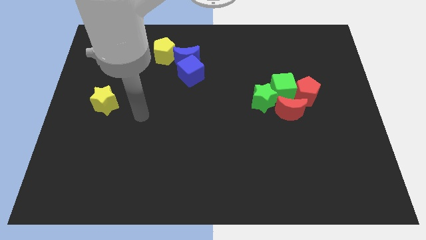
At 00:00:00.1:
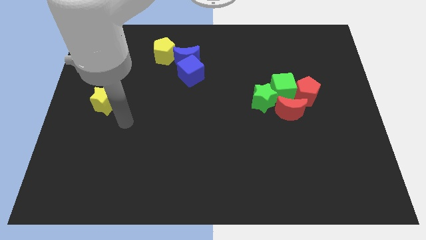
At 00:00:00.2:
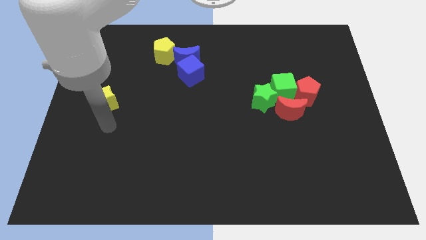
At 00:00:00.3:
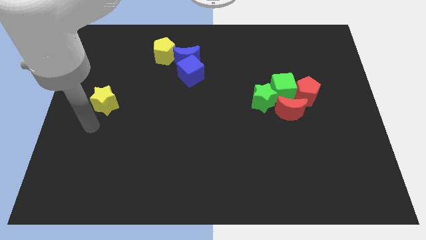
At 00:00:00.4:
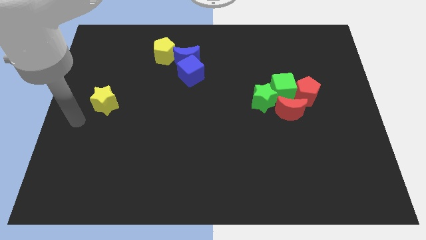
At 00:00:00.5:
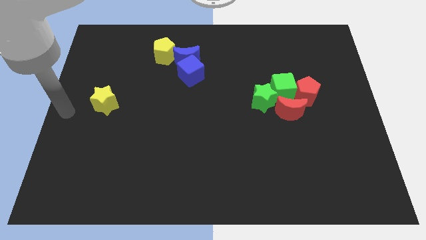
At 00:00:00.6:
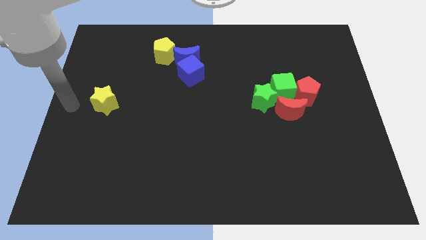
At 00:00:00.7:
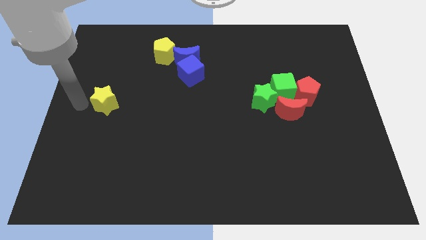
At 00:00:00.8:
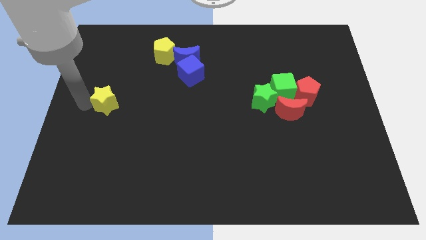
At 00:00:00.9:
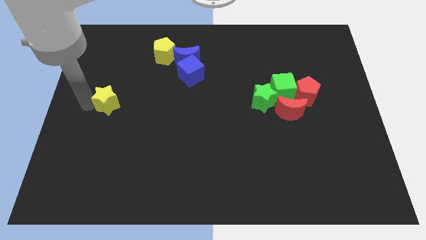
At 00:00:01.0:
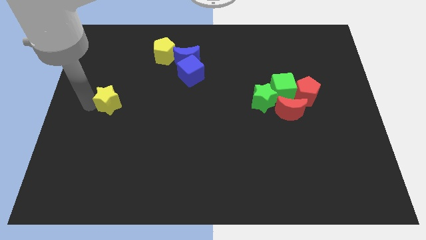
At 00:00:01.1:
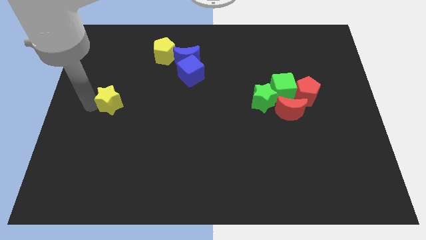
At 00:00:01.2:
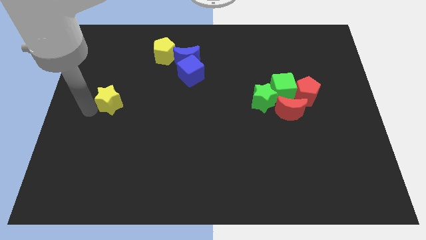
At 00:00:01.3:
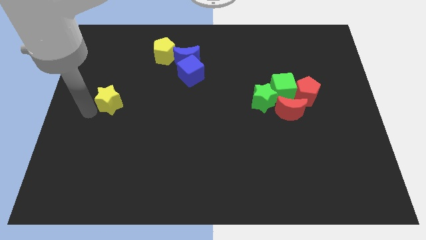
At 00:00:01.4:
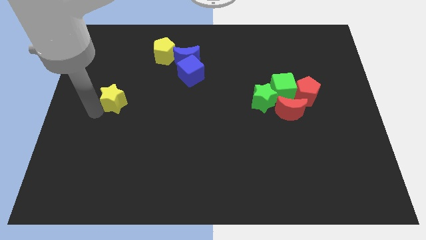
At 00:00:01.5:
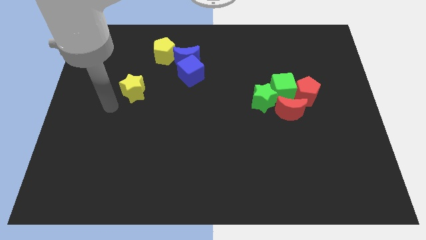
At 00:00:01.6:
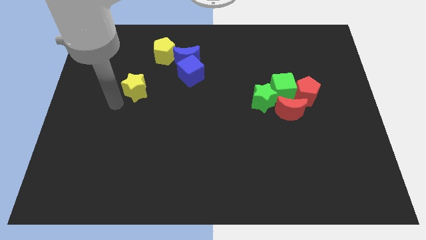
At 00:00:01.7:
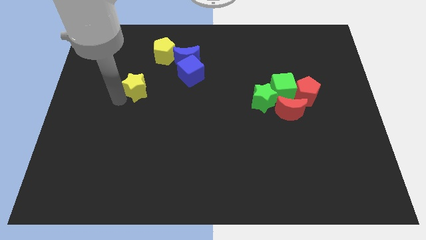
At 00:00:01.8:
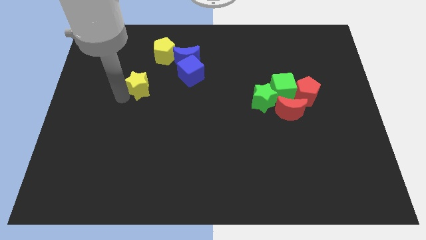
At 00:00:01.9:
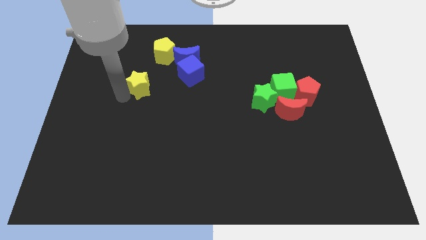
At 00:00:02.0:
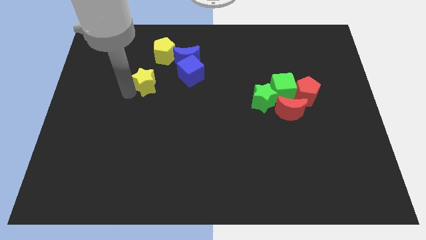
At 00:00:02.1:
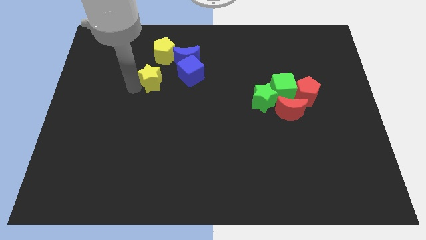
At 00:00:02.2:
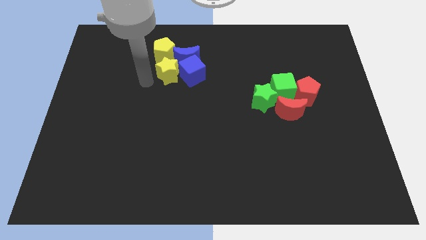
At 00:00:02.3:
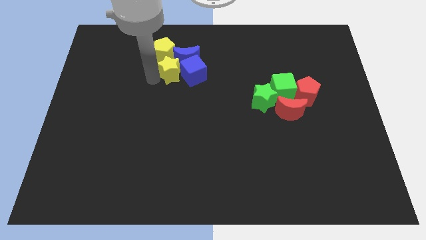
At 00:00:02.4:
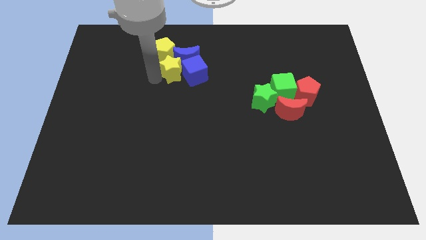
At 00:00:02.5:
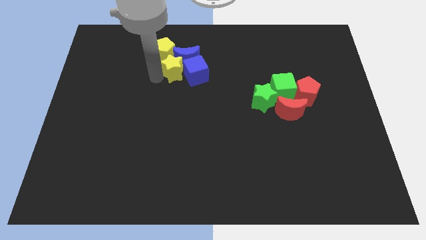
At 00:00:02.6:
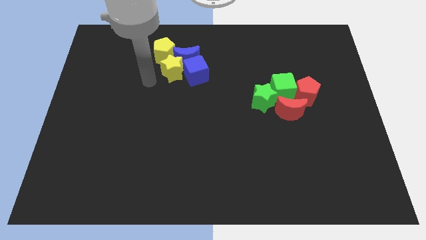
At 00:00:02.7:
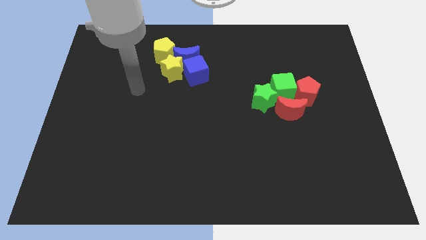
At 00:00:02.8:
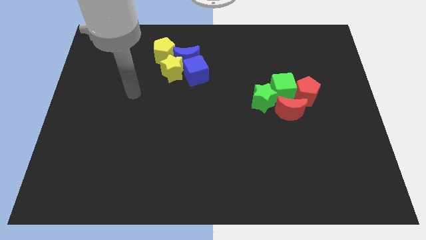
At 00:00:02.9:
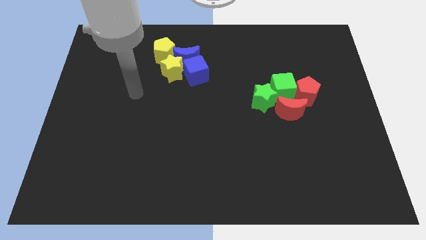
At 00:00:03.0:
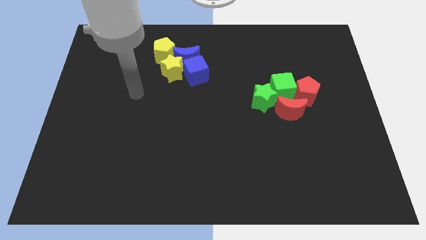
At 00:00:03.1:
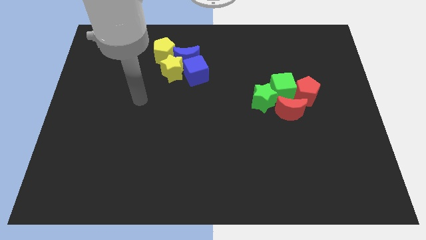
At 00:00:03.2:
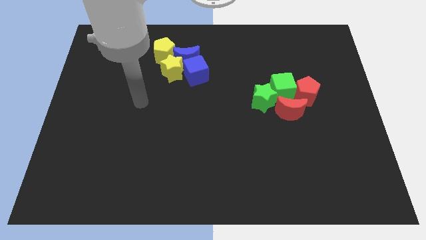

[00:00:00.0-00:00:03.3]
push the yellow star into the blue cube

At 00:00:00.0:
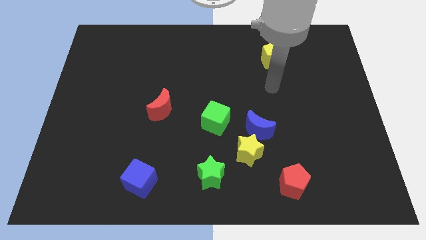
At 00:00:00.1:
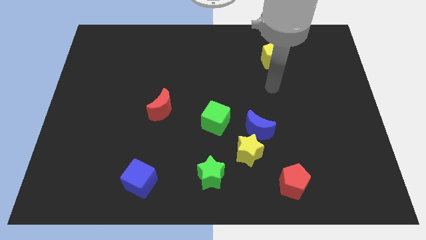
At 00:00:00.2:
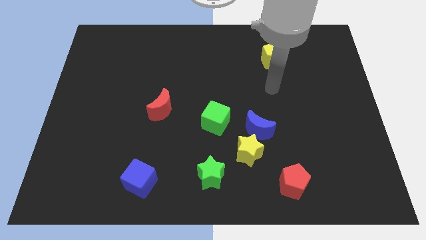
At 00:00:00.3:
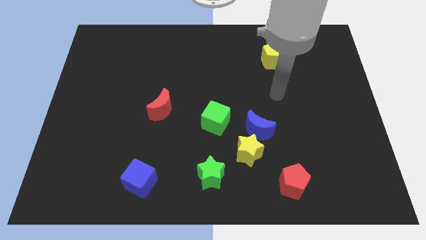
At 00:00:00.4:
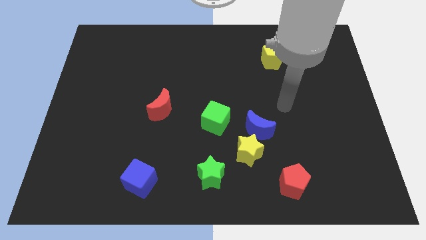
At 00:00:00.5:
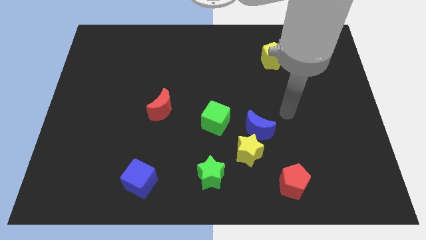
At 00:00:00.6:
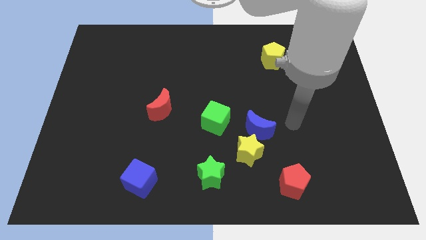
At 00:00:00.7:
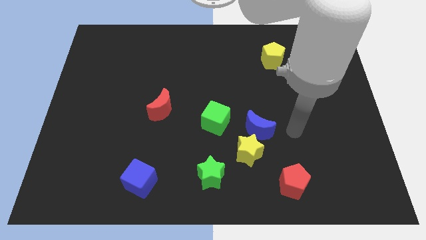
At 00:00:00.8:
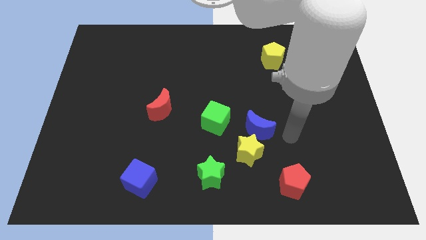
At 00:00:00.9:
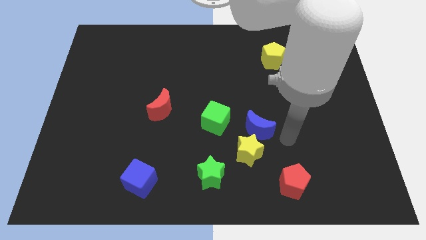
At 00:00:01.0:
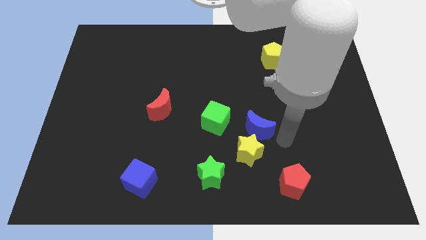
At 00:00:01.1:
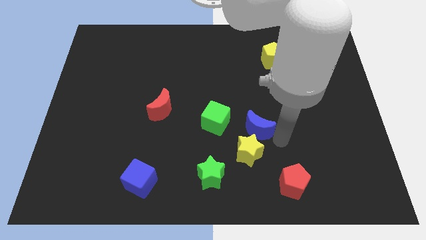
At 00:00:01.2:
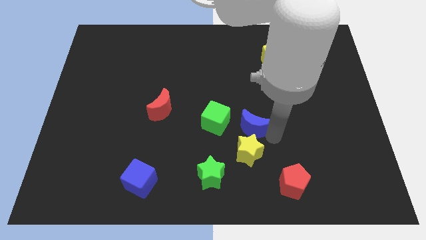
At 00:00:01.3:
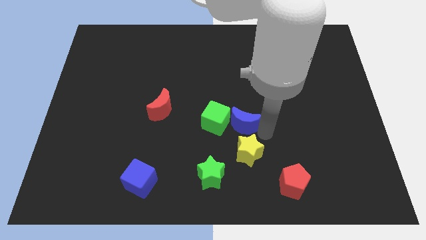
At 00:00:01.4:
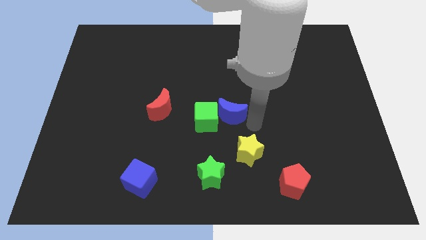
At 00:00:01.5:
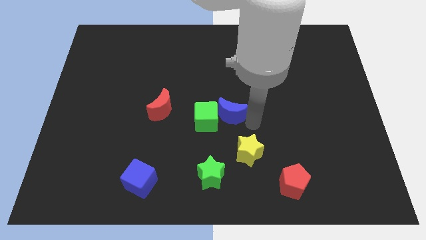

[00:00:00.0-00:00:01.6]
move blue crescent into the green cube

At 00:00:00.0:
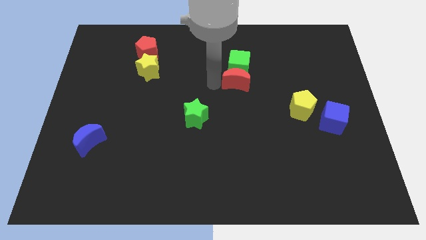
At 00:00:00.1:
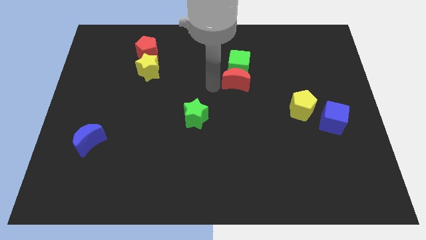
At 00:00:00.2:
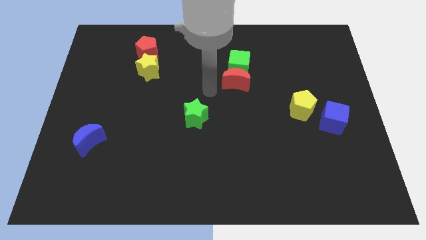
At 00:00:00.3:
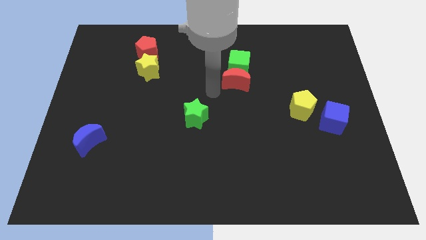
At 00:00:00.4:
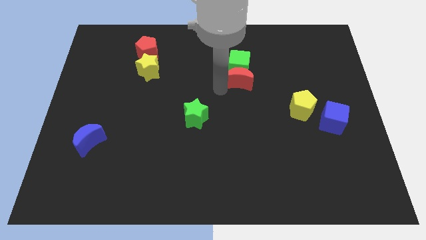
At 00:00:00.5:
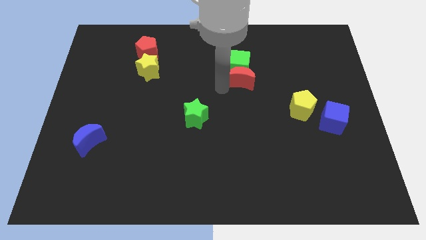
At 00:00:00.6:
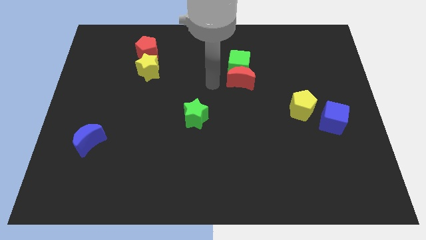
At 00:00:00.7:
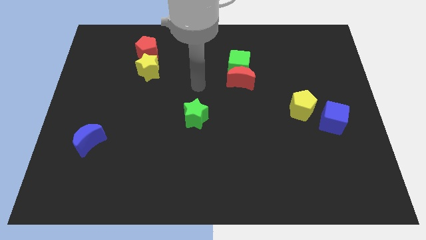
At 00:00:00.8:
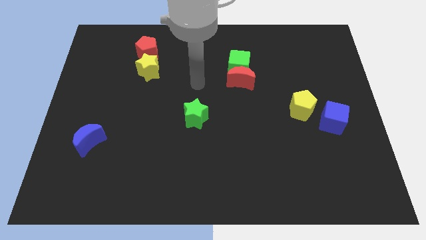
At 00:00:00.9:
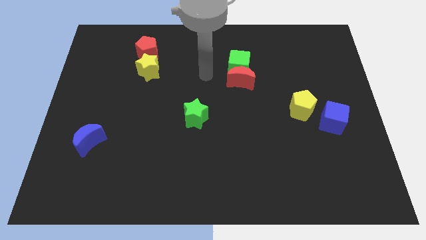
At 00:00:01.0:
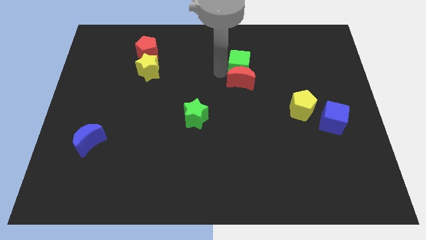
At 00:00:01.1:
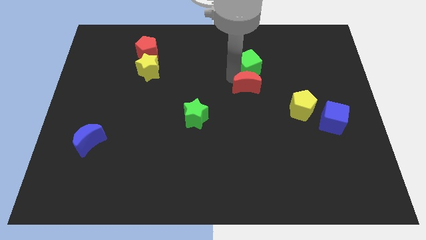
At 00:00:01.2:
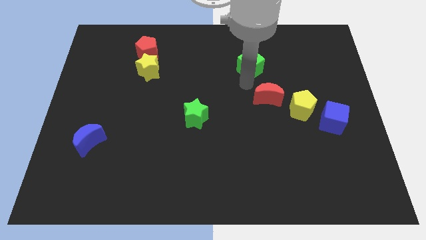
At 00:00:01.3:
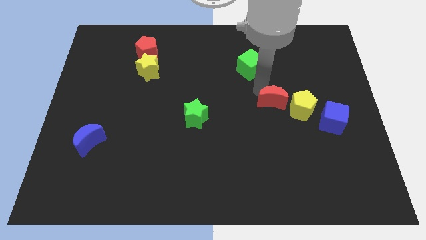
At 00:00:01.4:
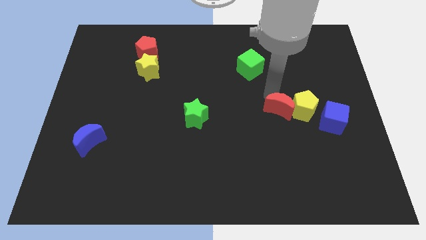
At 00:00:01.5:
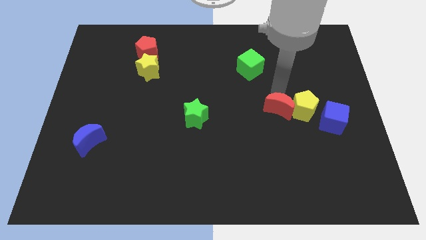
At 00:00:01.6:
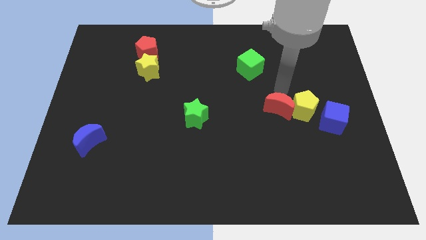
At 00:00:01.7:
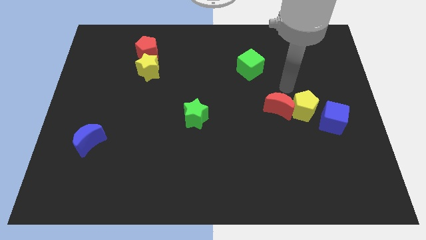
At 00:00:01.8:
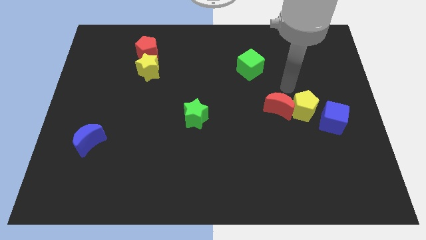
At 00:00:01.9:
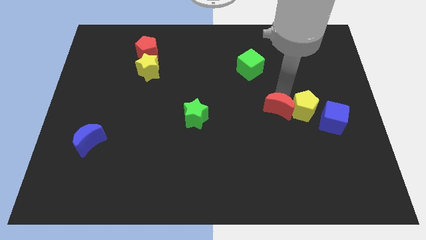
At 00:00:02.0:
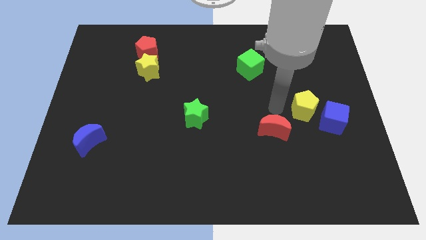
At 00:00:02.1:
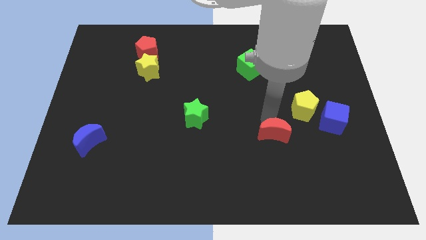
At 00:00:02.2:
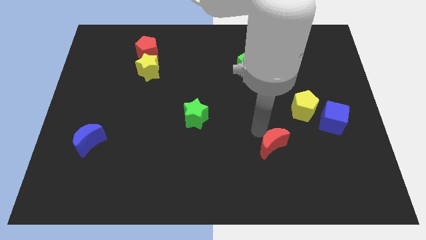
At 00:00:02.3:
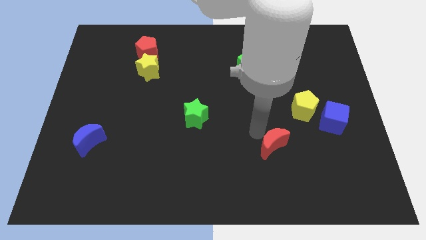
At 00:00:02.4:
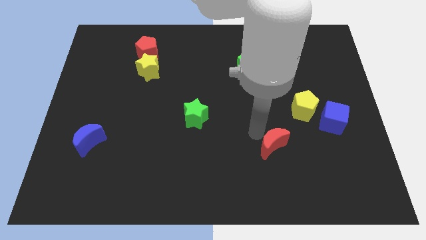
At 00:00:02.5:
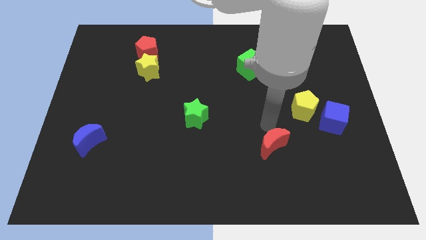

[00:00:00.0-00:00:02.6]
push the red crescent to the bottom left of the yellow pentagon

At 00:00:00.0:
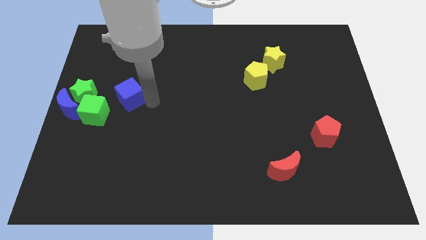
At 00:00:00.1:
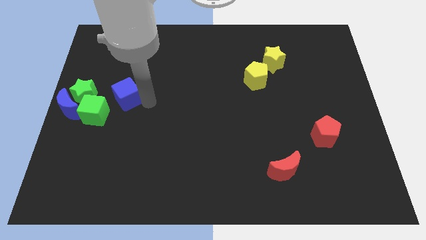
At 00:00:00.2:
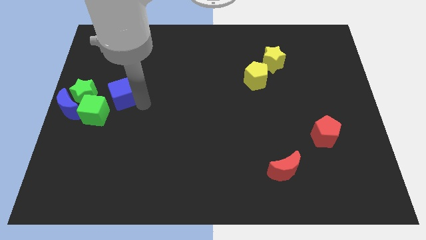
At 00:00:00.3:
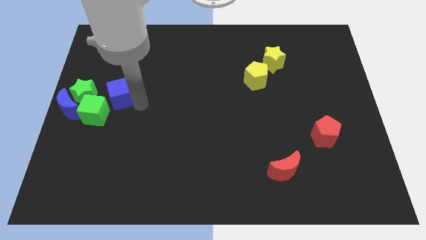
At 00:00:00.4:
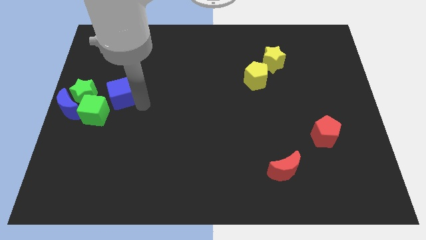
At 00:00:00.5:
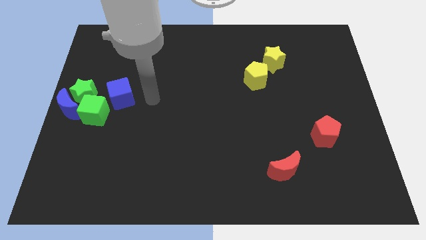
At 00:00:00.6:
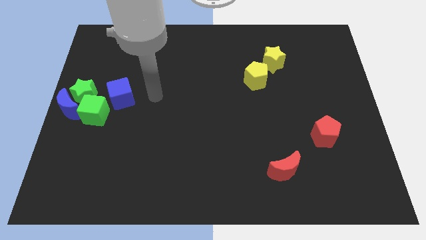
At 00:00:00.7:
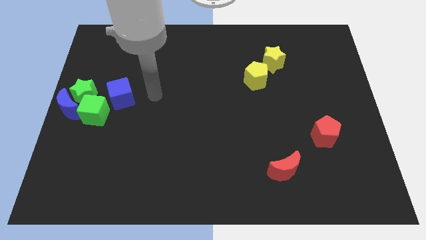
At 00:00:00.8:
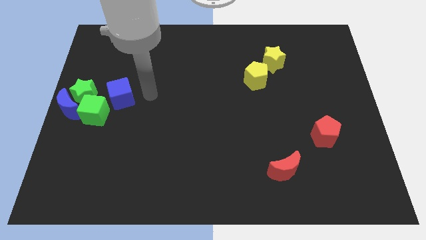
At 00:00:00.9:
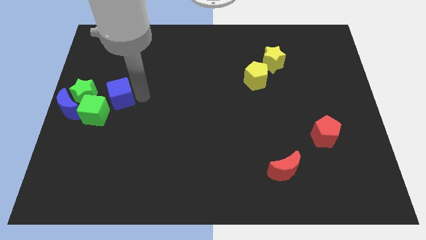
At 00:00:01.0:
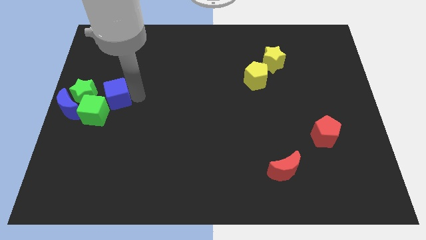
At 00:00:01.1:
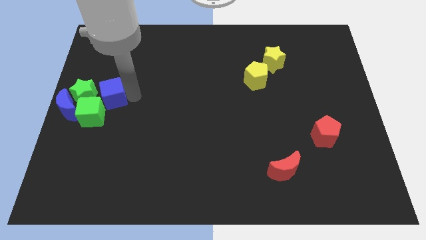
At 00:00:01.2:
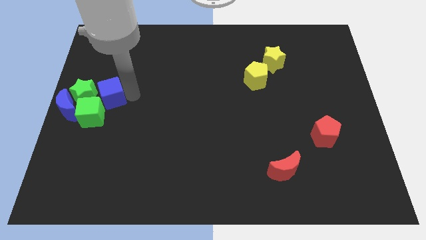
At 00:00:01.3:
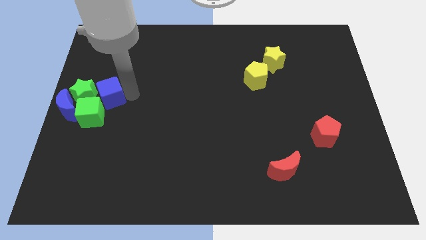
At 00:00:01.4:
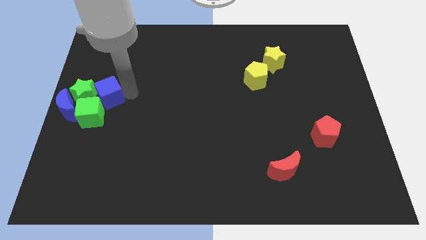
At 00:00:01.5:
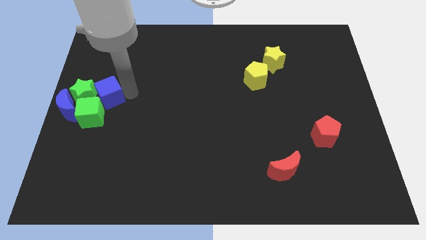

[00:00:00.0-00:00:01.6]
drag the blue cube into the green cube from the right
